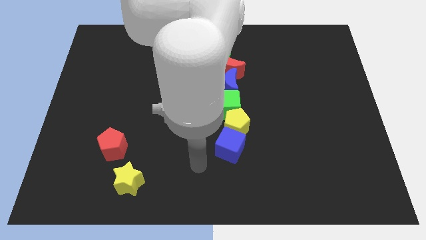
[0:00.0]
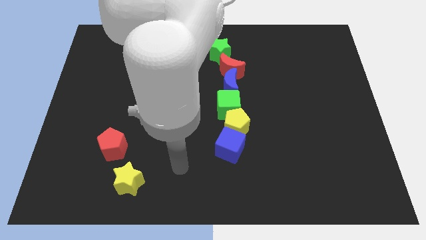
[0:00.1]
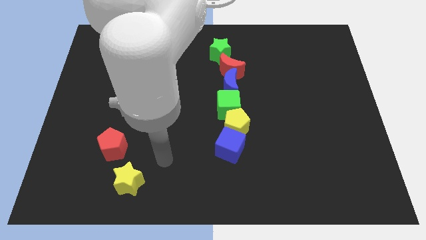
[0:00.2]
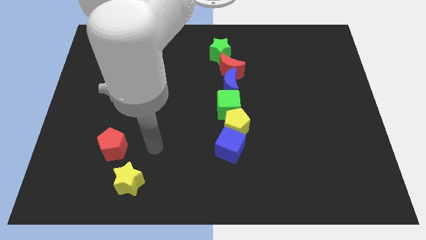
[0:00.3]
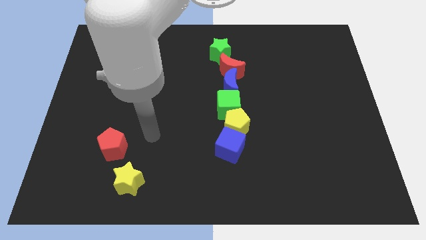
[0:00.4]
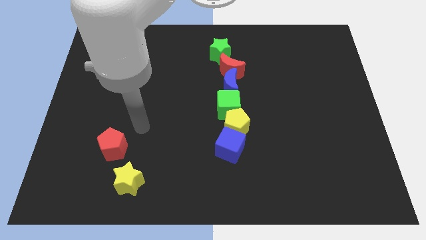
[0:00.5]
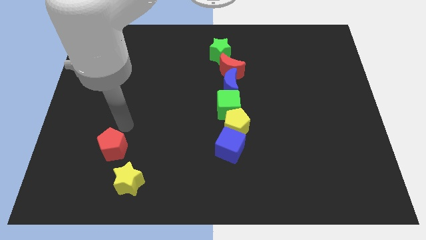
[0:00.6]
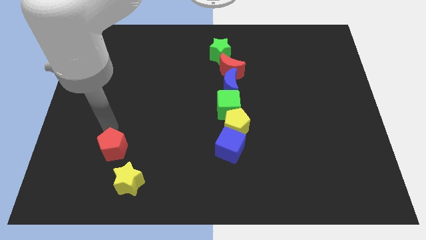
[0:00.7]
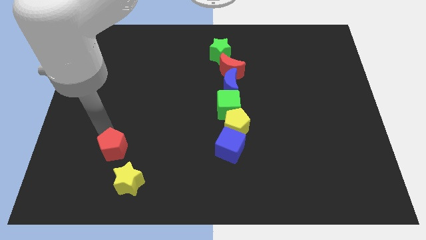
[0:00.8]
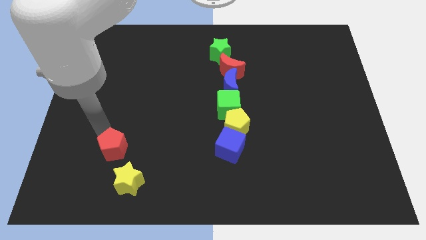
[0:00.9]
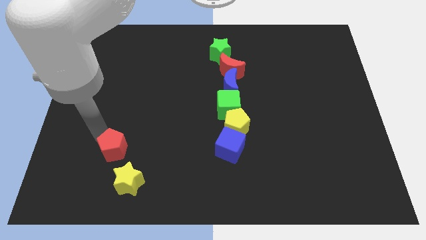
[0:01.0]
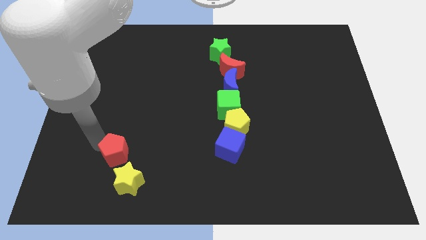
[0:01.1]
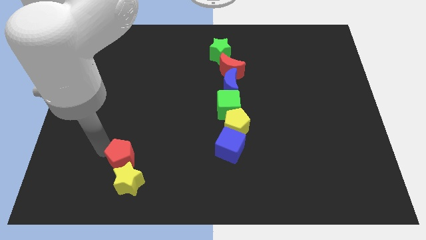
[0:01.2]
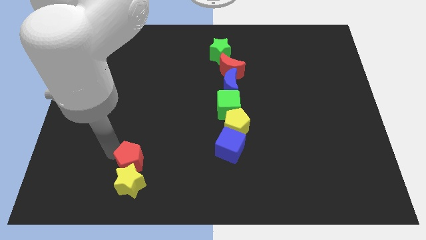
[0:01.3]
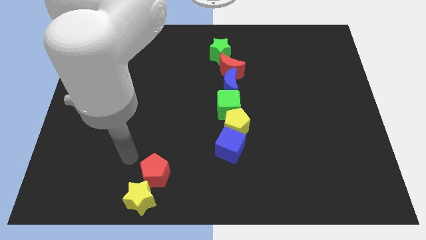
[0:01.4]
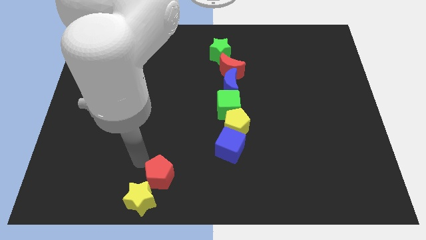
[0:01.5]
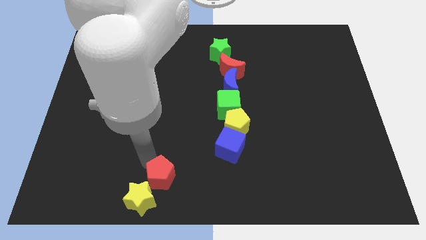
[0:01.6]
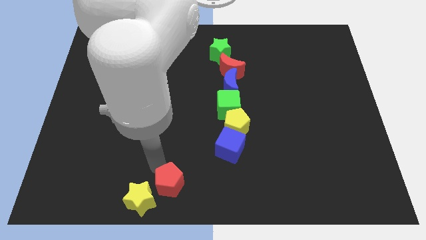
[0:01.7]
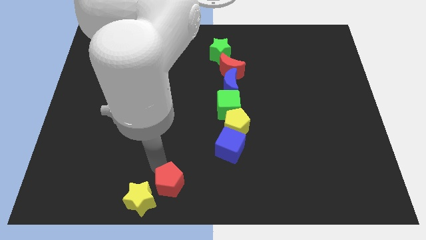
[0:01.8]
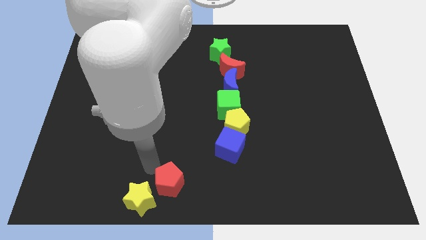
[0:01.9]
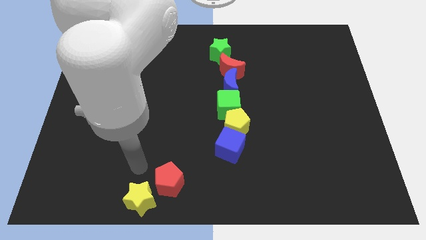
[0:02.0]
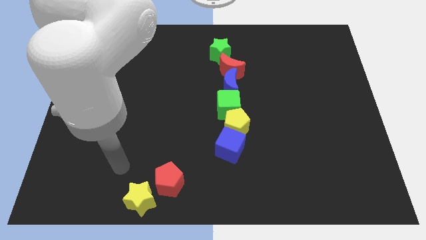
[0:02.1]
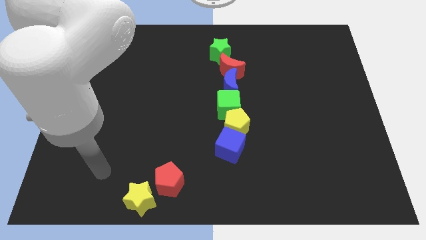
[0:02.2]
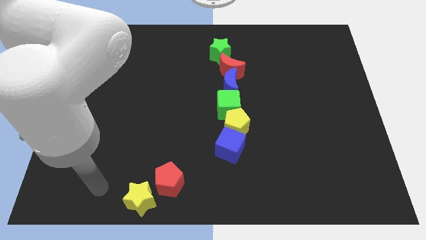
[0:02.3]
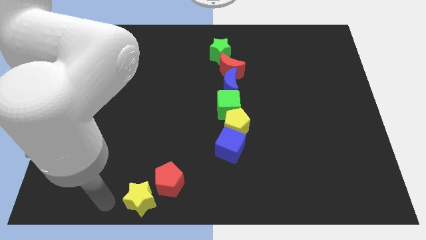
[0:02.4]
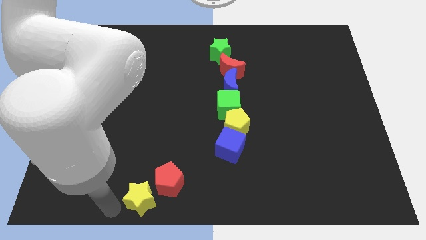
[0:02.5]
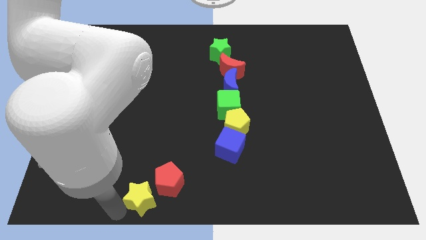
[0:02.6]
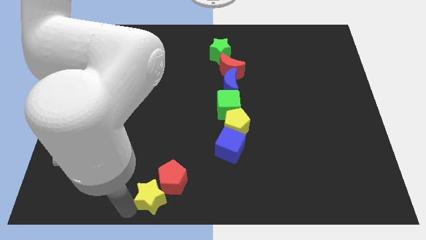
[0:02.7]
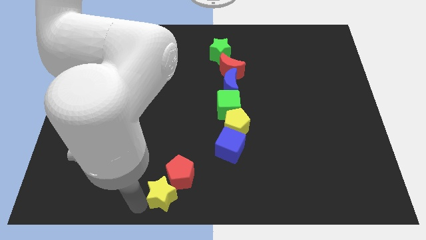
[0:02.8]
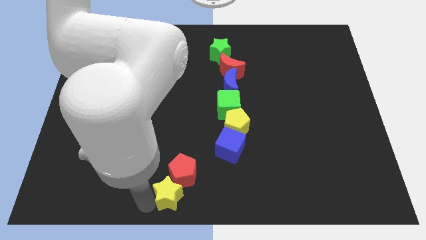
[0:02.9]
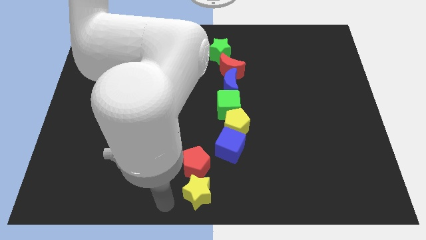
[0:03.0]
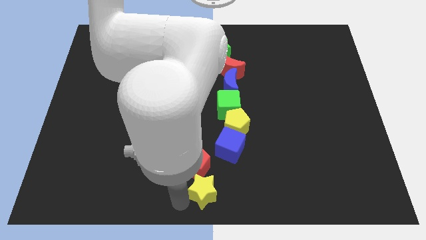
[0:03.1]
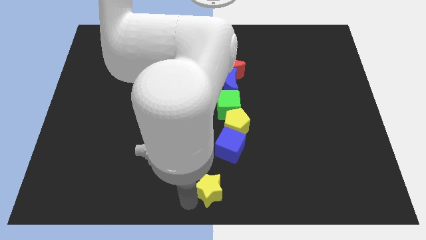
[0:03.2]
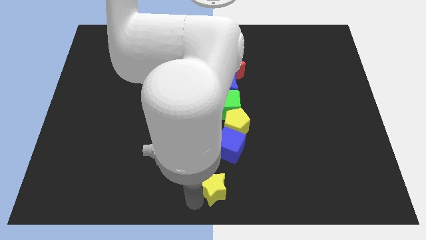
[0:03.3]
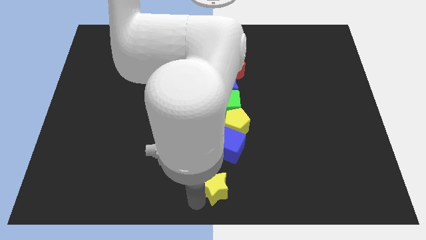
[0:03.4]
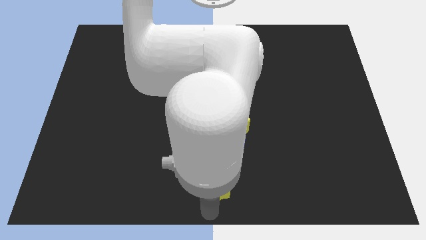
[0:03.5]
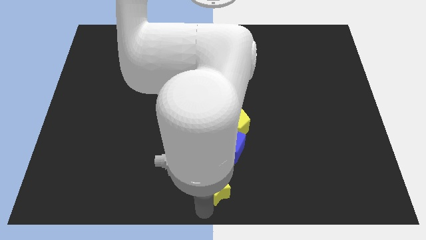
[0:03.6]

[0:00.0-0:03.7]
push the yellow star and the red pentagon to the right of the board

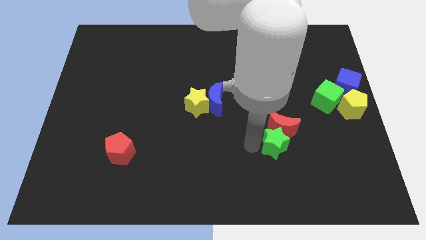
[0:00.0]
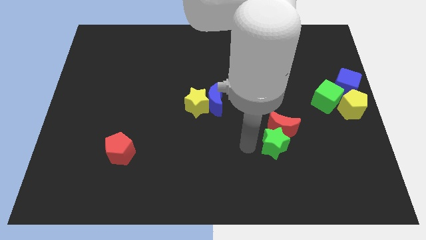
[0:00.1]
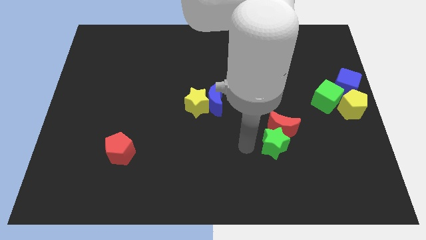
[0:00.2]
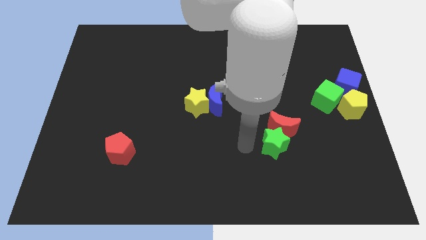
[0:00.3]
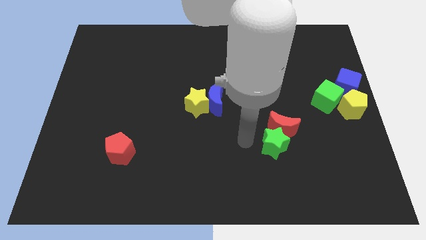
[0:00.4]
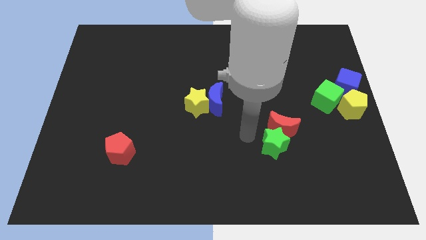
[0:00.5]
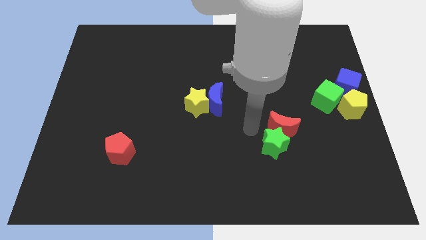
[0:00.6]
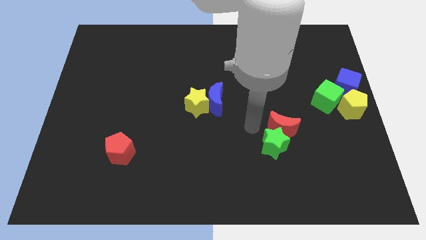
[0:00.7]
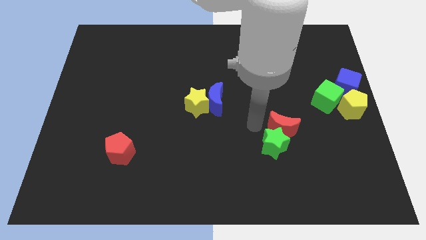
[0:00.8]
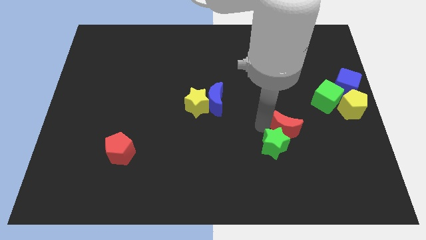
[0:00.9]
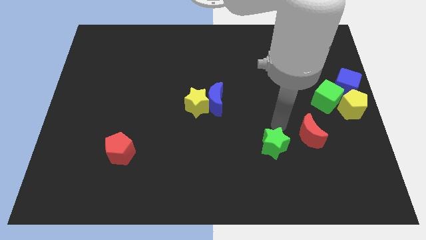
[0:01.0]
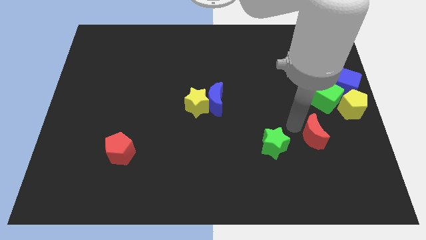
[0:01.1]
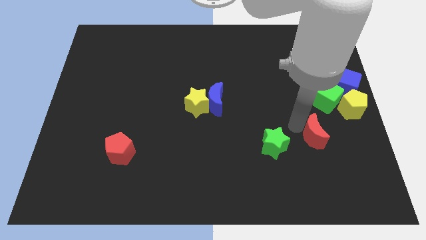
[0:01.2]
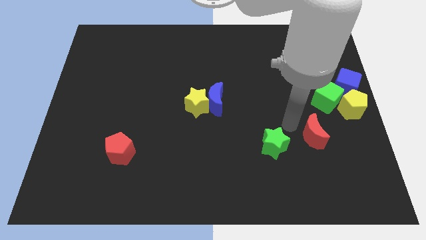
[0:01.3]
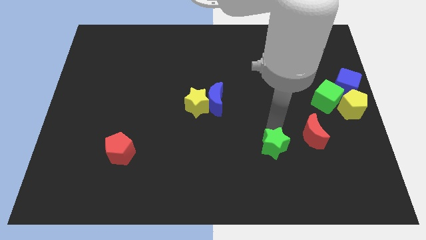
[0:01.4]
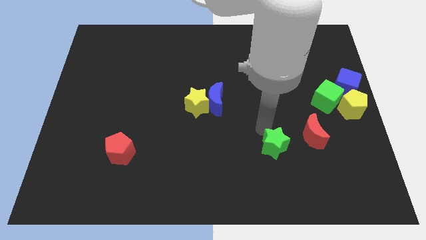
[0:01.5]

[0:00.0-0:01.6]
separate the red crescent and green star

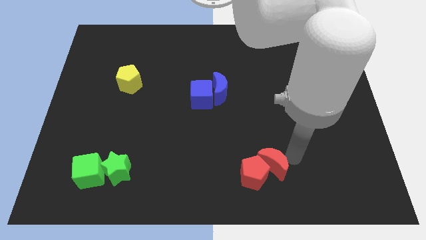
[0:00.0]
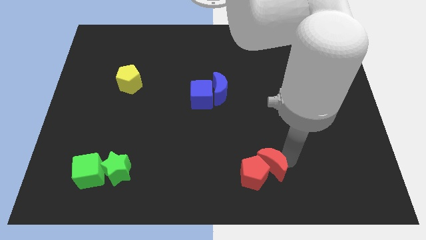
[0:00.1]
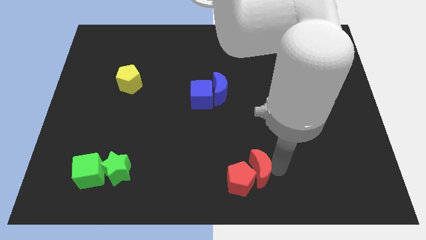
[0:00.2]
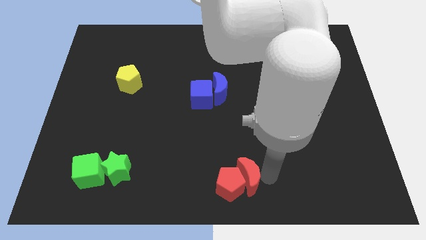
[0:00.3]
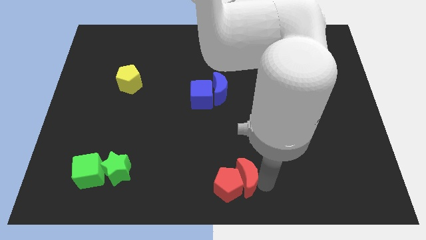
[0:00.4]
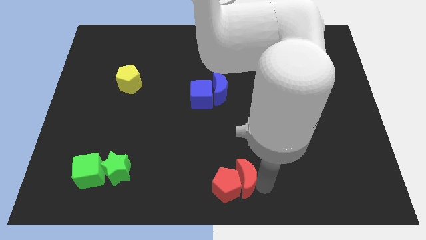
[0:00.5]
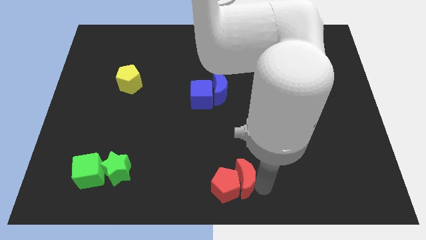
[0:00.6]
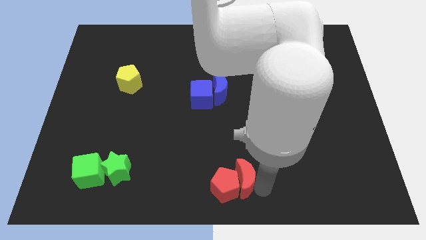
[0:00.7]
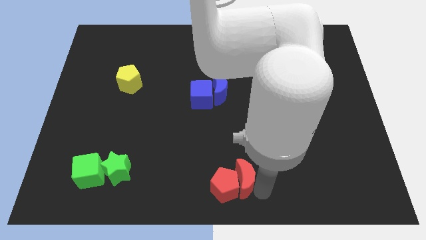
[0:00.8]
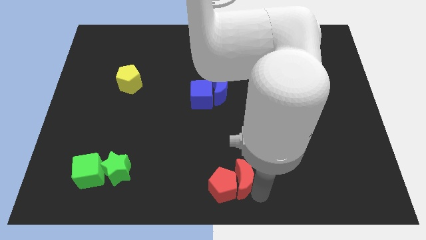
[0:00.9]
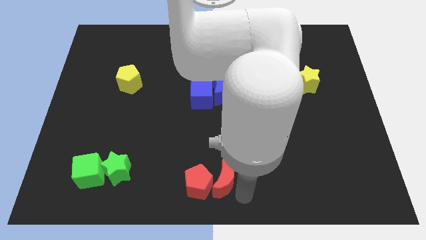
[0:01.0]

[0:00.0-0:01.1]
push the red pentagon with red moon to the bottom center of the board

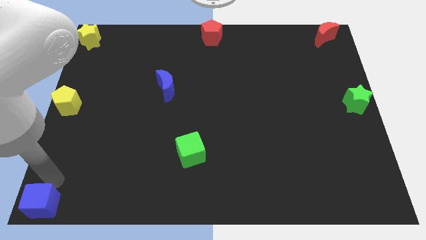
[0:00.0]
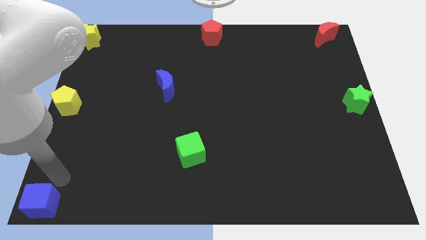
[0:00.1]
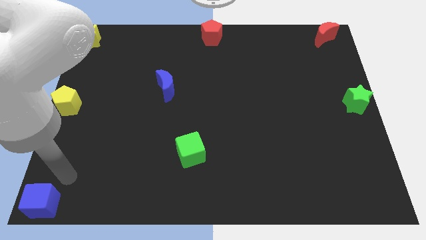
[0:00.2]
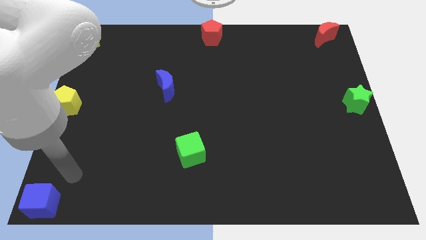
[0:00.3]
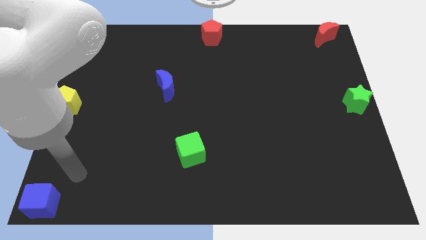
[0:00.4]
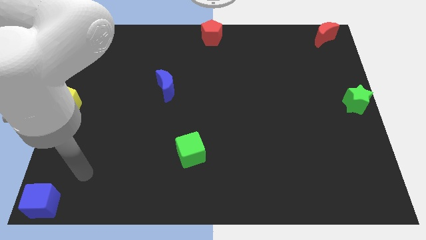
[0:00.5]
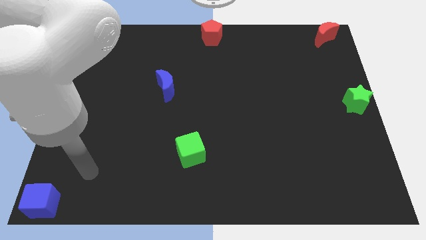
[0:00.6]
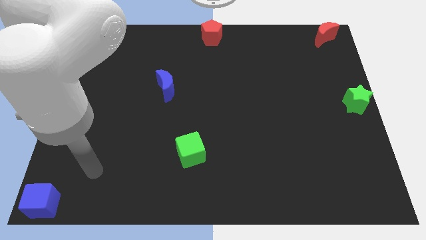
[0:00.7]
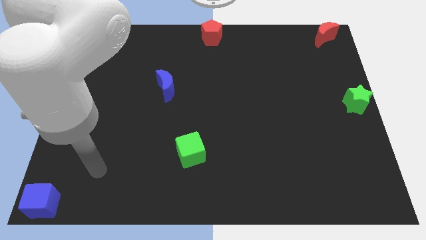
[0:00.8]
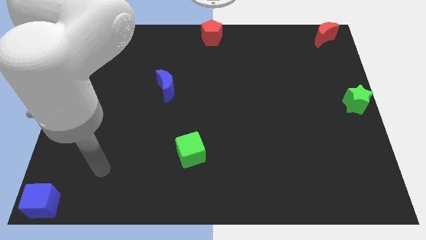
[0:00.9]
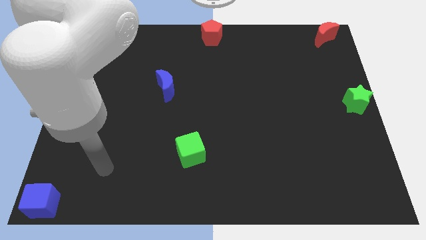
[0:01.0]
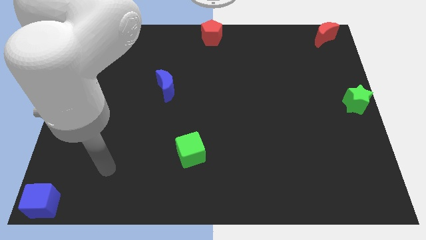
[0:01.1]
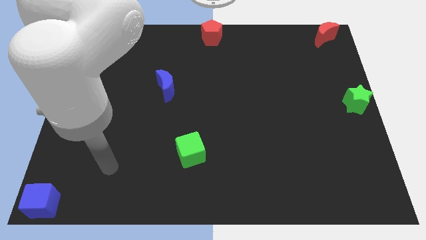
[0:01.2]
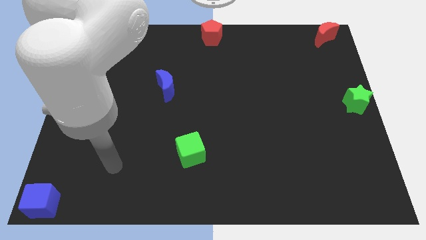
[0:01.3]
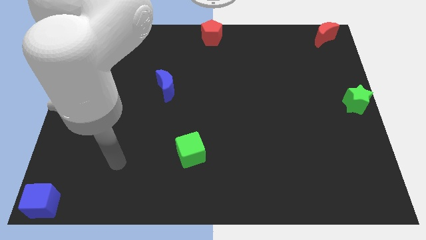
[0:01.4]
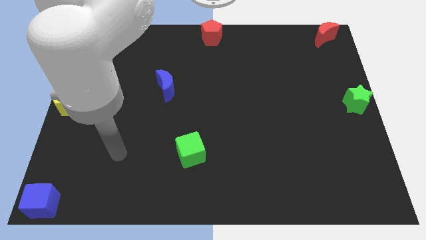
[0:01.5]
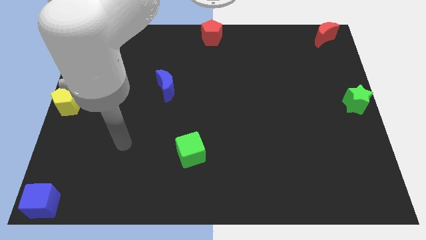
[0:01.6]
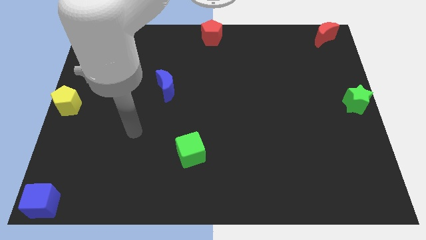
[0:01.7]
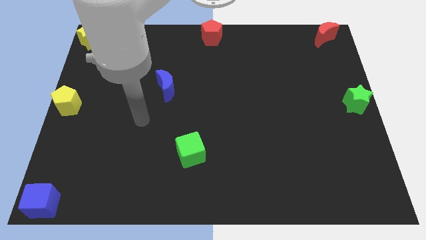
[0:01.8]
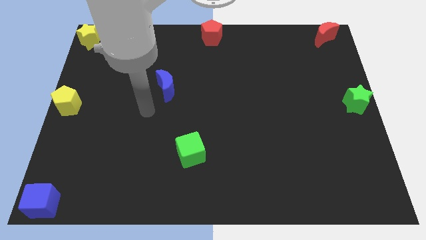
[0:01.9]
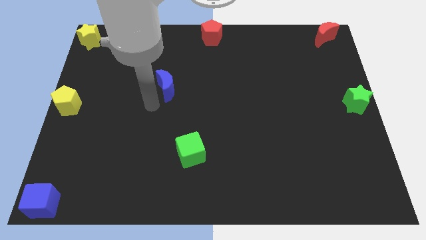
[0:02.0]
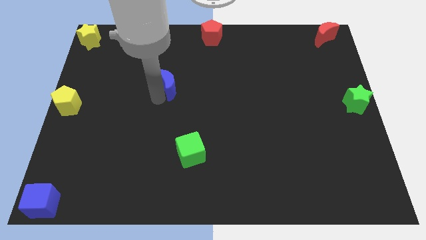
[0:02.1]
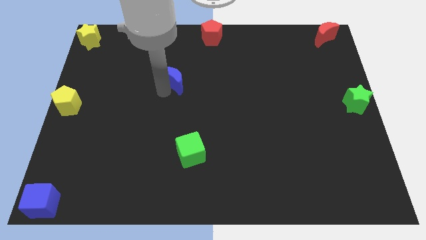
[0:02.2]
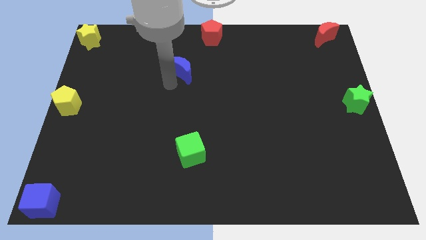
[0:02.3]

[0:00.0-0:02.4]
move your arm away form the blue cube

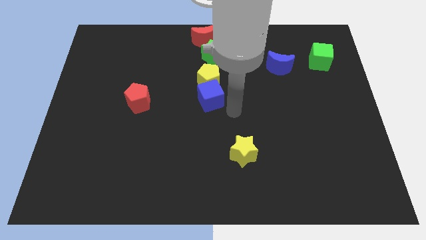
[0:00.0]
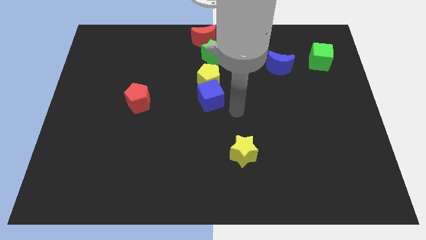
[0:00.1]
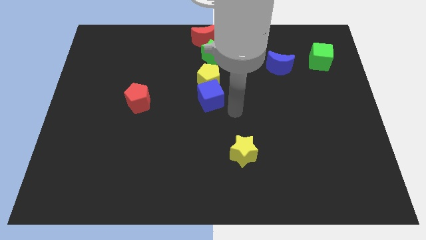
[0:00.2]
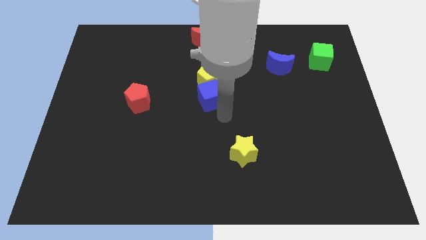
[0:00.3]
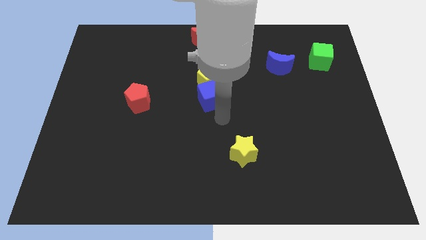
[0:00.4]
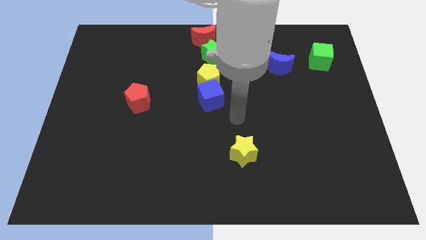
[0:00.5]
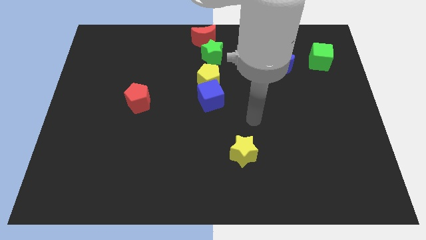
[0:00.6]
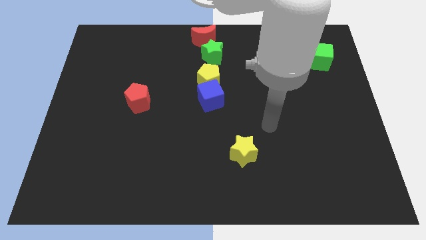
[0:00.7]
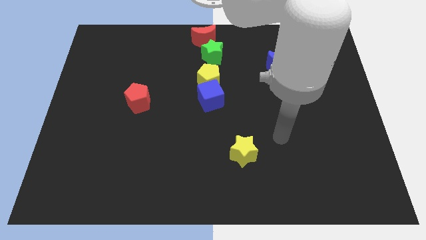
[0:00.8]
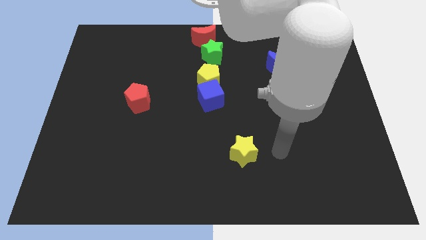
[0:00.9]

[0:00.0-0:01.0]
move the arm away from the blue cube
